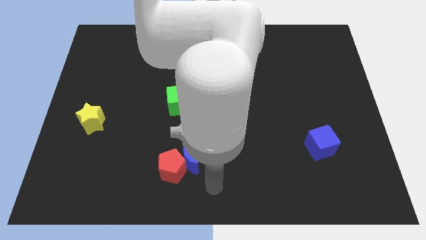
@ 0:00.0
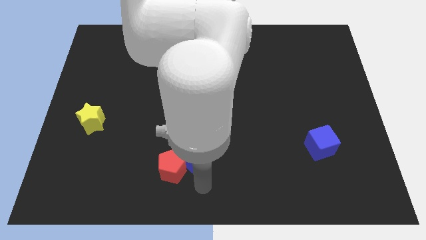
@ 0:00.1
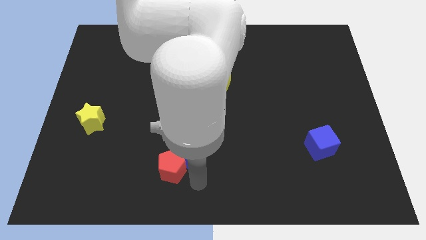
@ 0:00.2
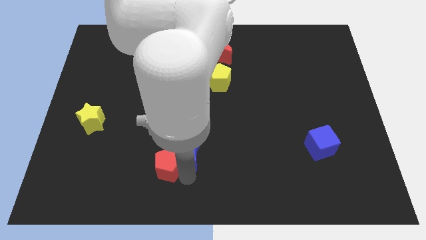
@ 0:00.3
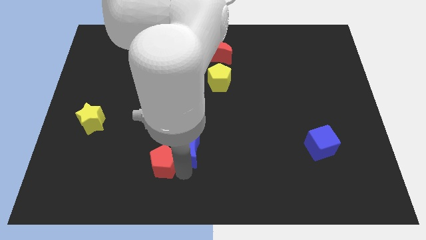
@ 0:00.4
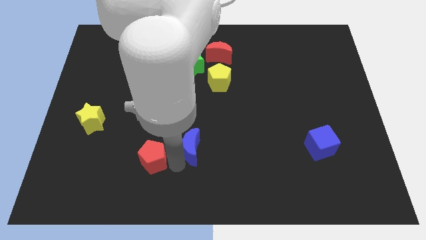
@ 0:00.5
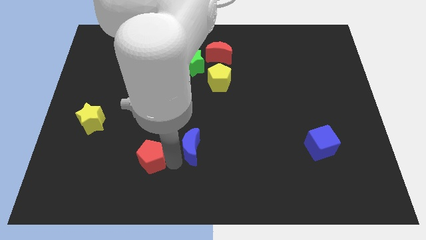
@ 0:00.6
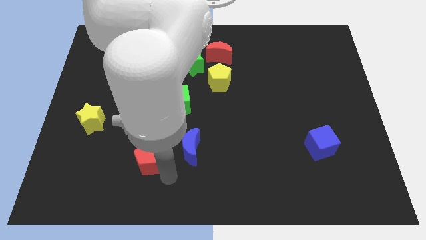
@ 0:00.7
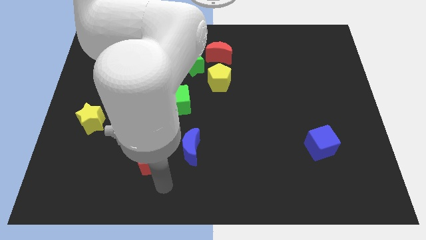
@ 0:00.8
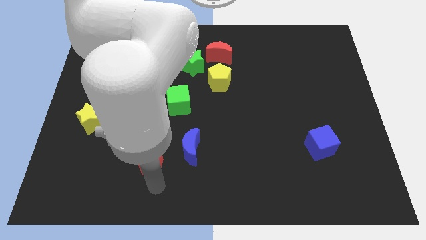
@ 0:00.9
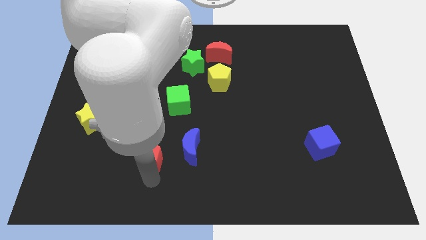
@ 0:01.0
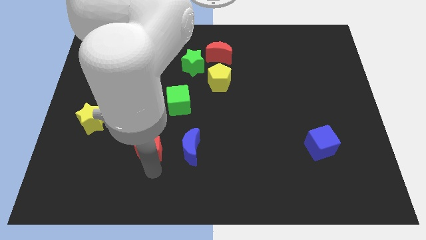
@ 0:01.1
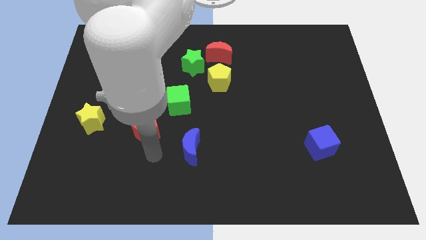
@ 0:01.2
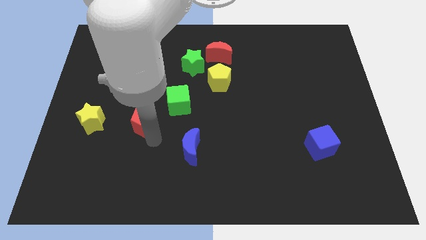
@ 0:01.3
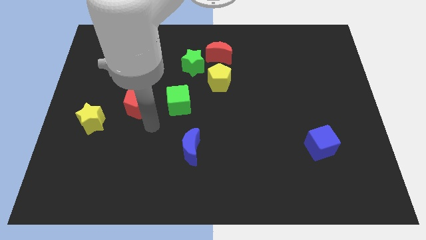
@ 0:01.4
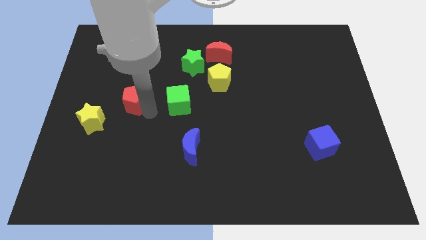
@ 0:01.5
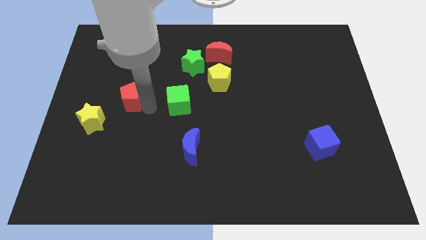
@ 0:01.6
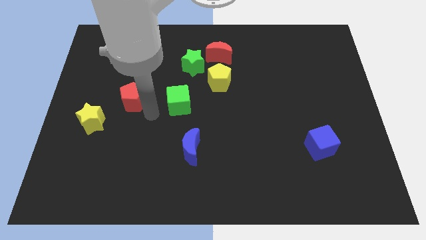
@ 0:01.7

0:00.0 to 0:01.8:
push the red pentagon diagonal to the left of the green cube

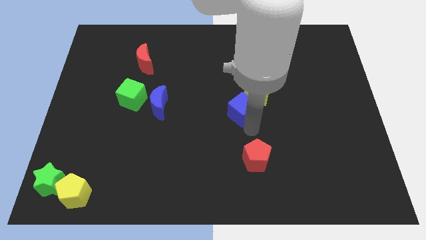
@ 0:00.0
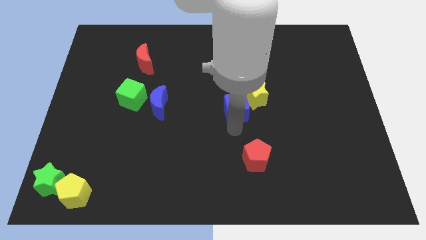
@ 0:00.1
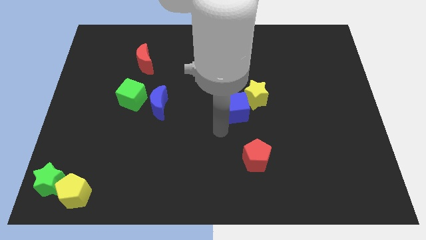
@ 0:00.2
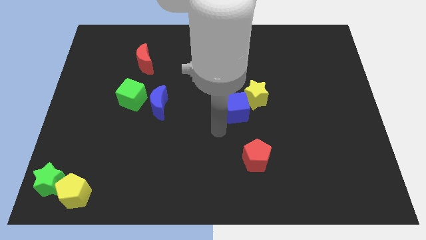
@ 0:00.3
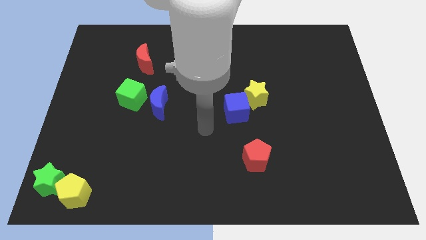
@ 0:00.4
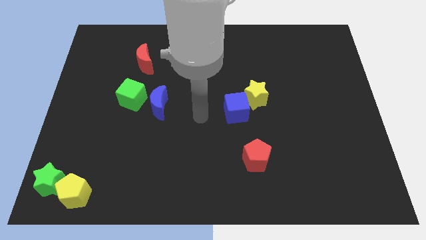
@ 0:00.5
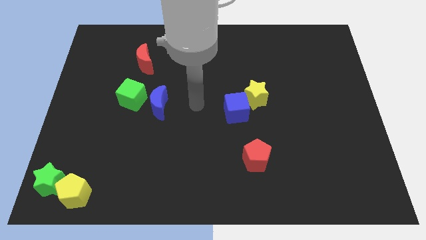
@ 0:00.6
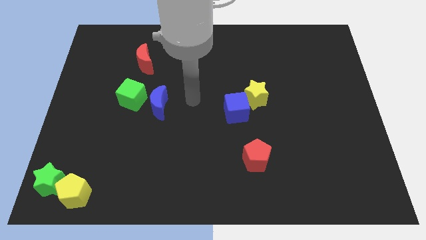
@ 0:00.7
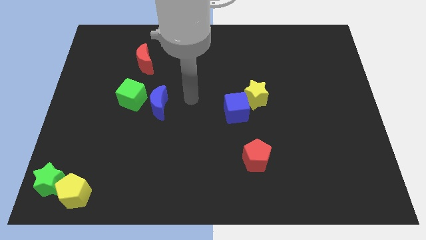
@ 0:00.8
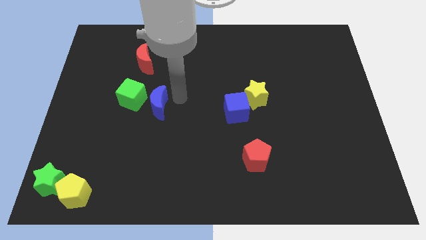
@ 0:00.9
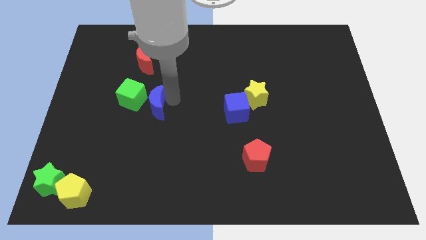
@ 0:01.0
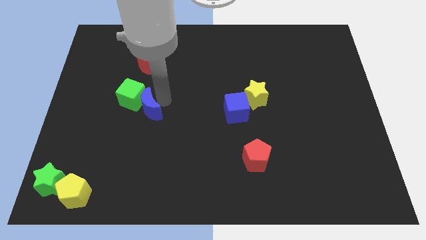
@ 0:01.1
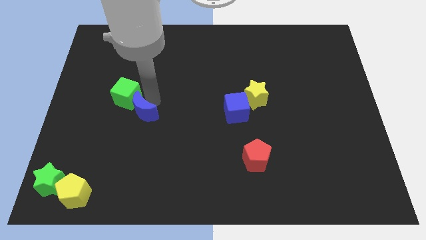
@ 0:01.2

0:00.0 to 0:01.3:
push the blue crescent into the green cube

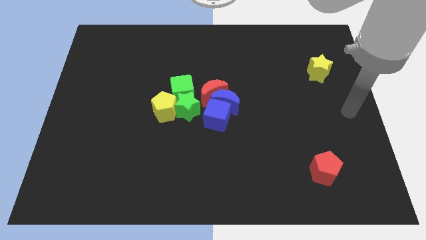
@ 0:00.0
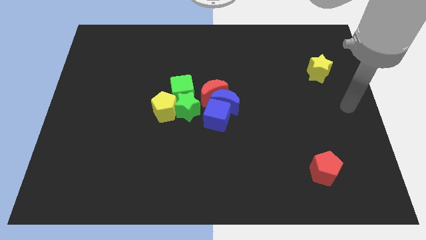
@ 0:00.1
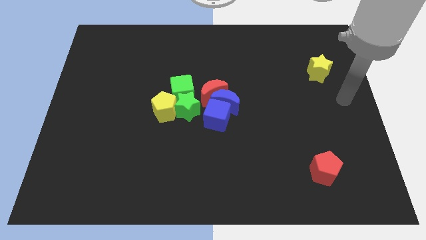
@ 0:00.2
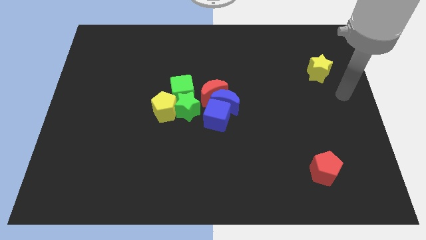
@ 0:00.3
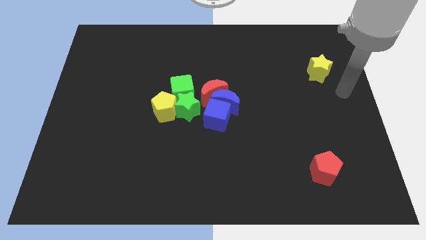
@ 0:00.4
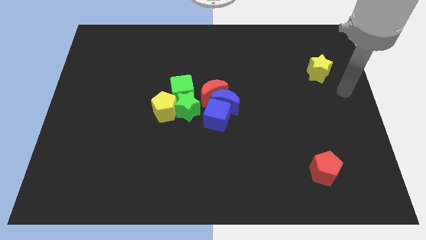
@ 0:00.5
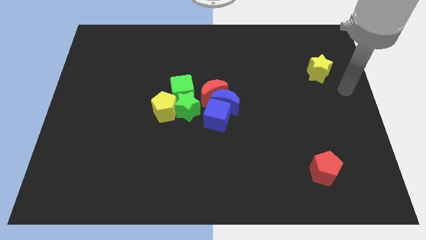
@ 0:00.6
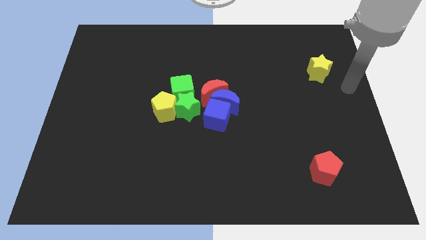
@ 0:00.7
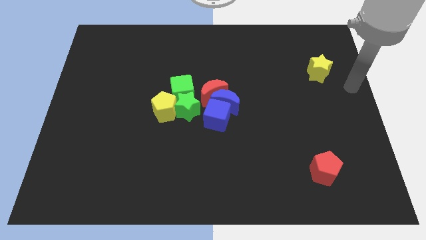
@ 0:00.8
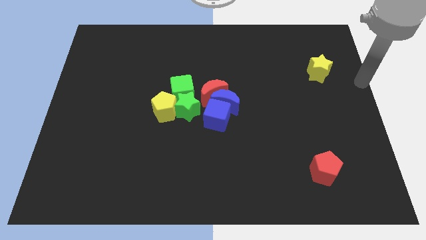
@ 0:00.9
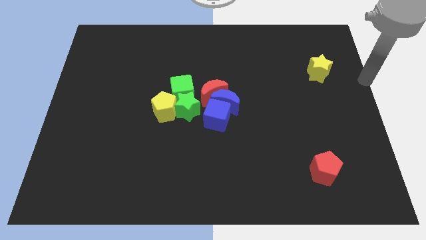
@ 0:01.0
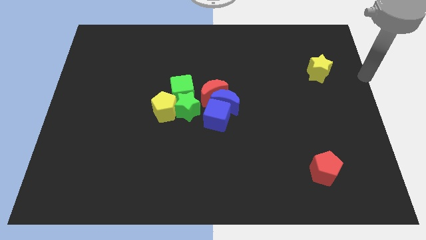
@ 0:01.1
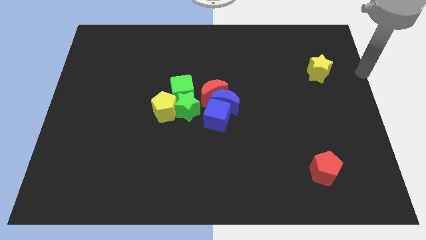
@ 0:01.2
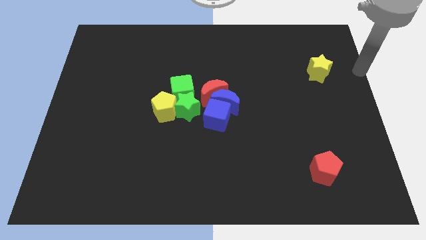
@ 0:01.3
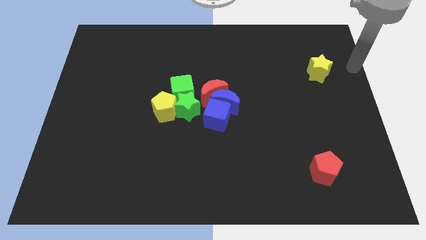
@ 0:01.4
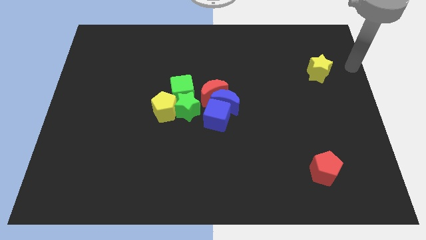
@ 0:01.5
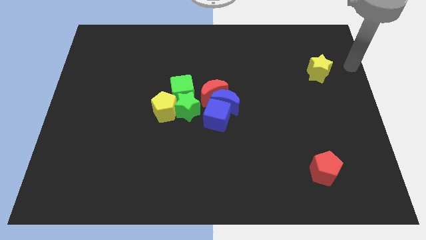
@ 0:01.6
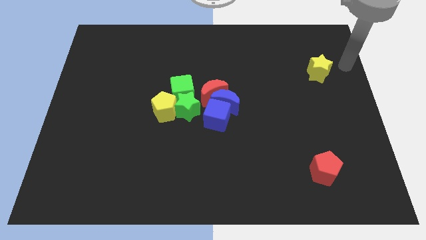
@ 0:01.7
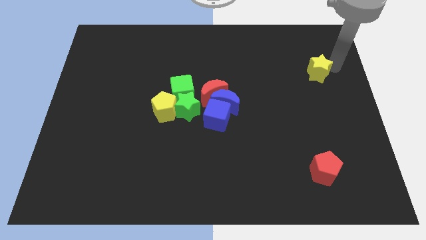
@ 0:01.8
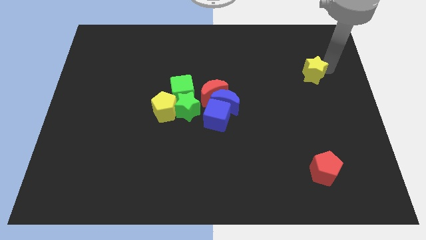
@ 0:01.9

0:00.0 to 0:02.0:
move the yellow star slightly to the left

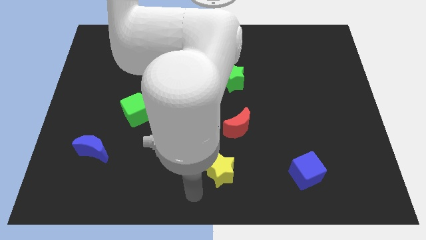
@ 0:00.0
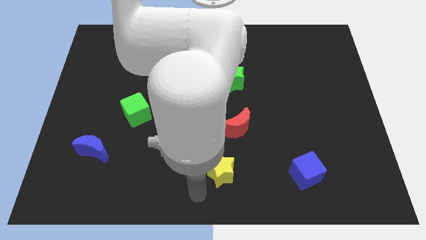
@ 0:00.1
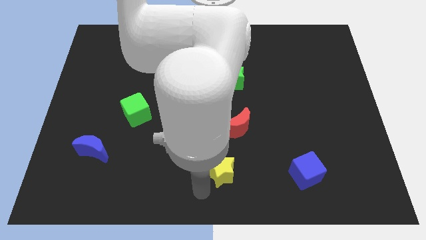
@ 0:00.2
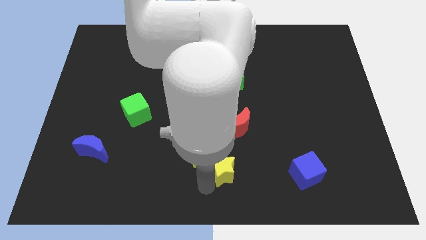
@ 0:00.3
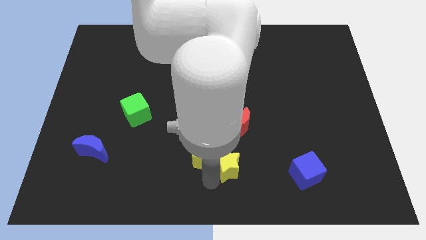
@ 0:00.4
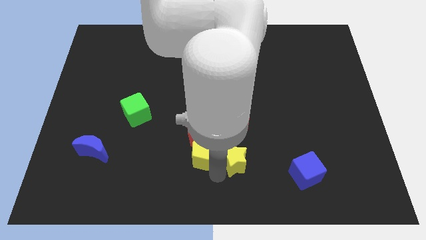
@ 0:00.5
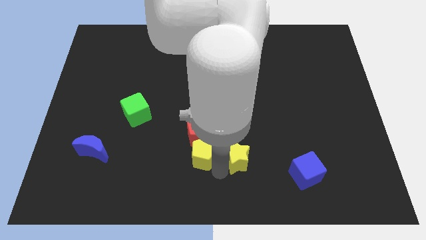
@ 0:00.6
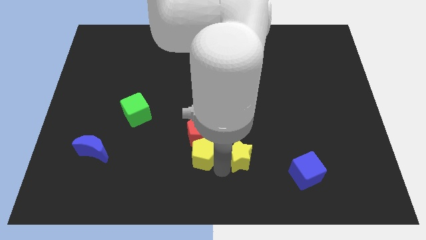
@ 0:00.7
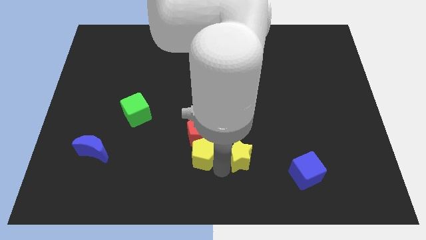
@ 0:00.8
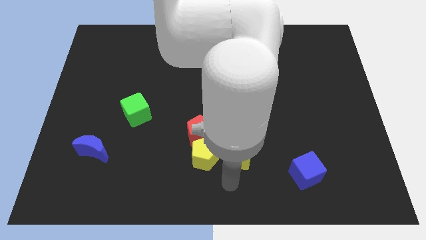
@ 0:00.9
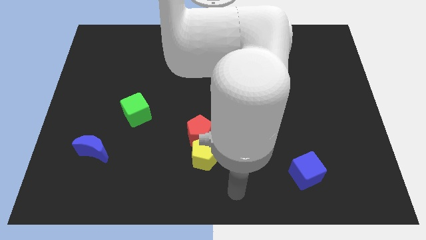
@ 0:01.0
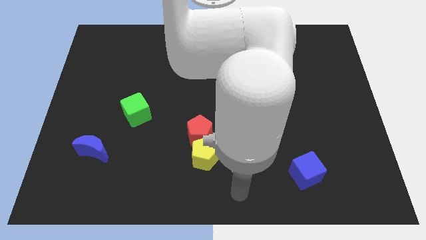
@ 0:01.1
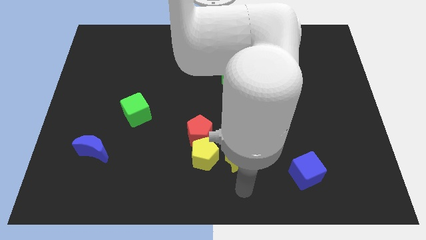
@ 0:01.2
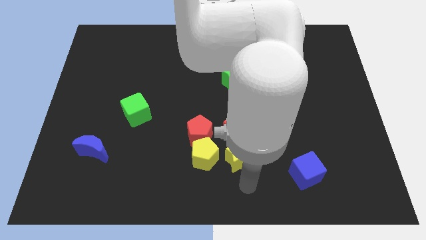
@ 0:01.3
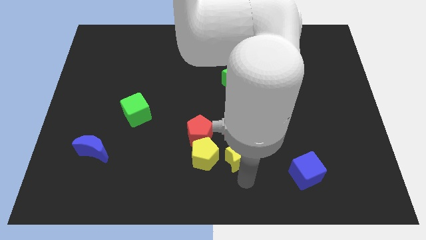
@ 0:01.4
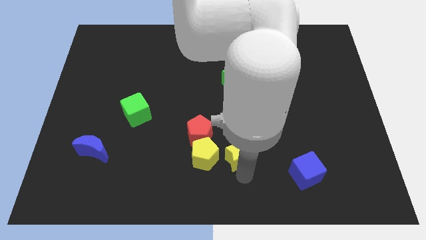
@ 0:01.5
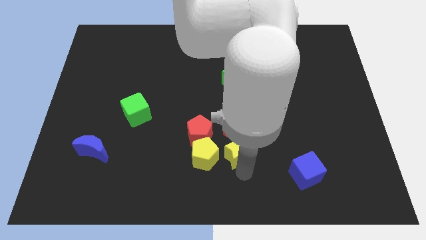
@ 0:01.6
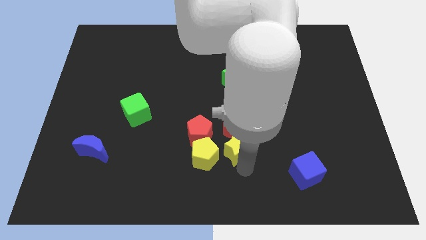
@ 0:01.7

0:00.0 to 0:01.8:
place the yellow star right to the yellow pentagon

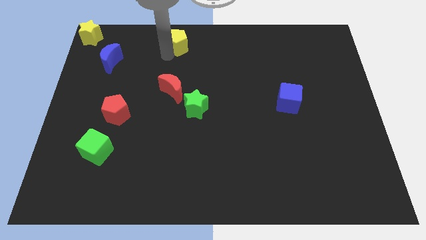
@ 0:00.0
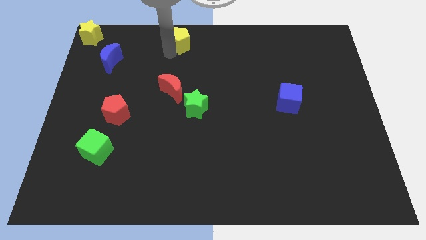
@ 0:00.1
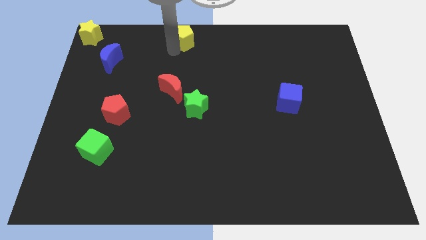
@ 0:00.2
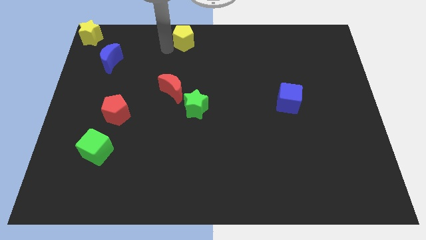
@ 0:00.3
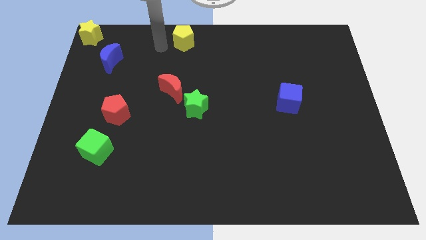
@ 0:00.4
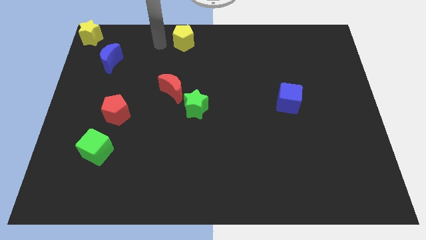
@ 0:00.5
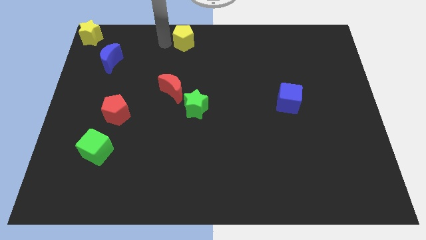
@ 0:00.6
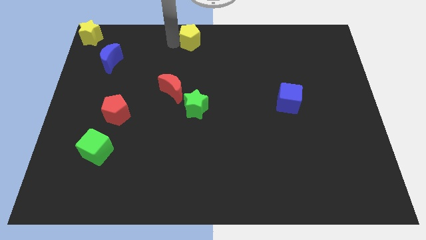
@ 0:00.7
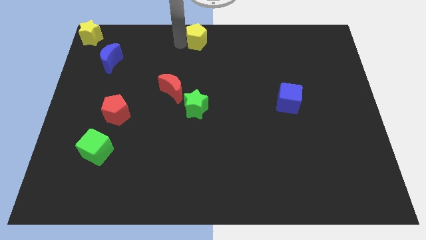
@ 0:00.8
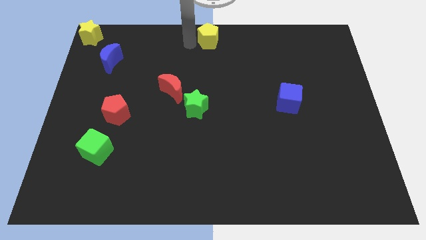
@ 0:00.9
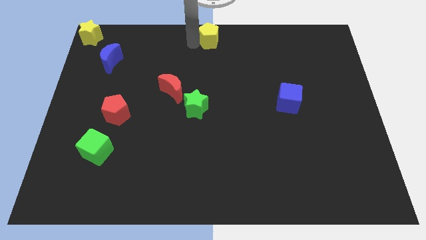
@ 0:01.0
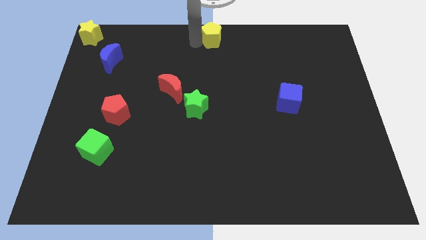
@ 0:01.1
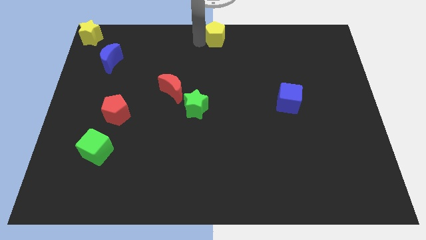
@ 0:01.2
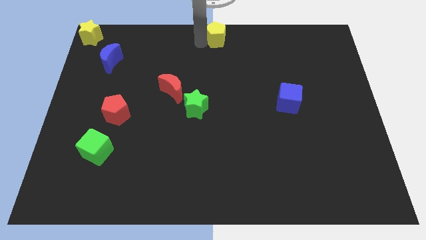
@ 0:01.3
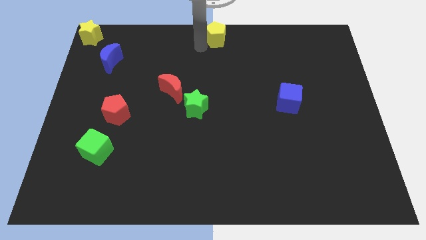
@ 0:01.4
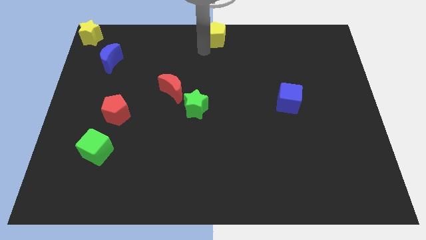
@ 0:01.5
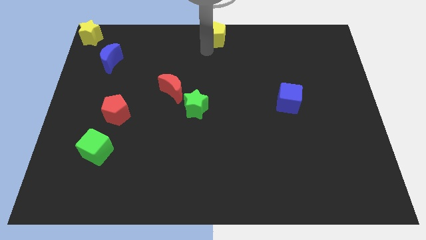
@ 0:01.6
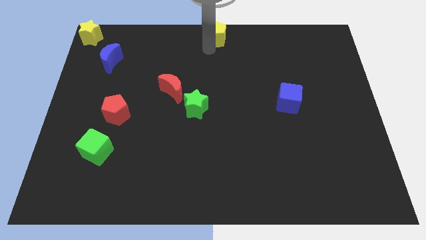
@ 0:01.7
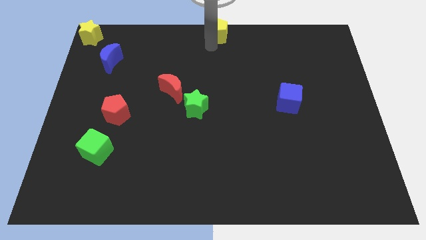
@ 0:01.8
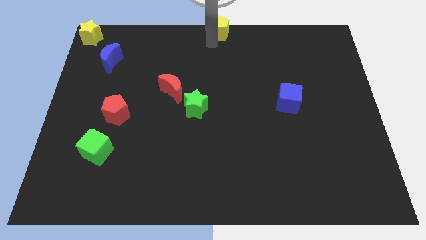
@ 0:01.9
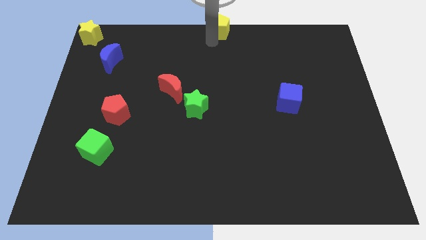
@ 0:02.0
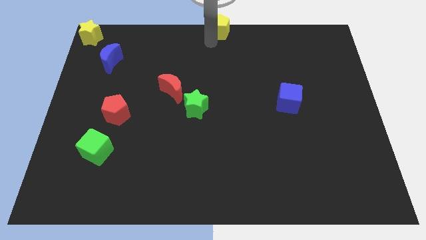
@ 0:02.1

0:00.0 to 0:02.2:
place the yellow pentagon at the top center of the board

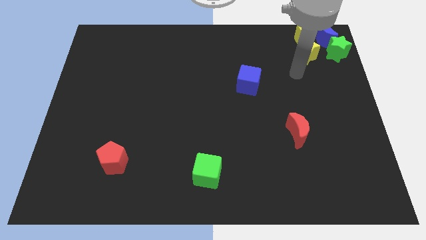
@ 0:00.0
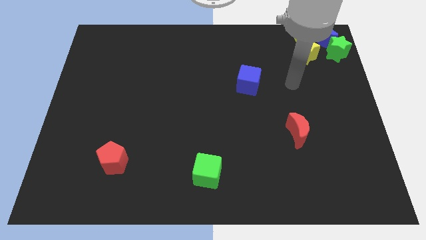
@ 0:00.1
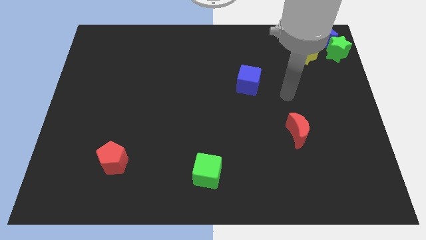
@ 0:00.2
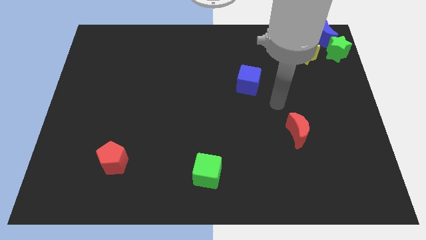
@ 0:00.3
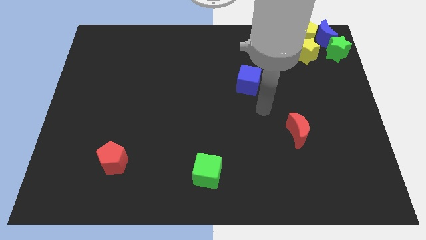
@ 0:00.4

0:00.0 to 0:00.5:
move the arm away from the yellow star
